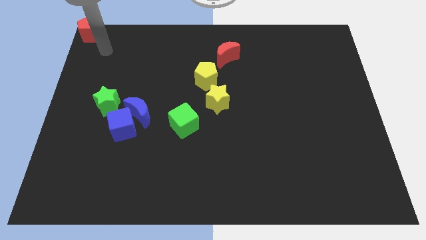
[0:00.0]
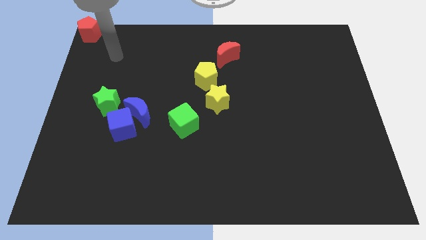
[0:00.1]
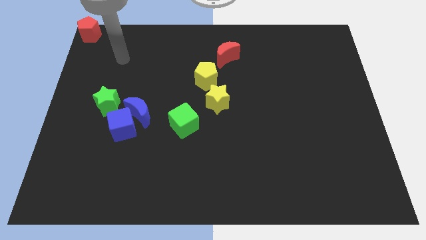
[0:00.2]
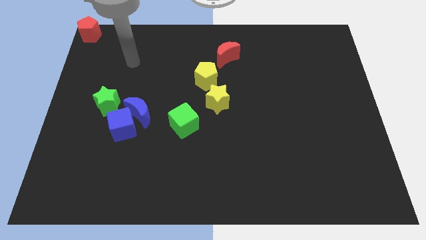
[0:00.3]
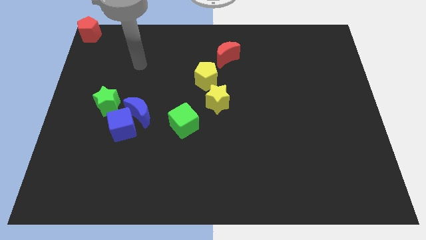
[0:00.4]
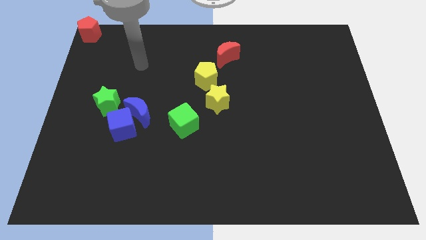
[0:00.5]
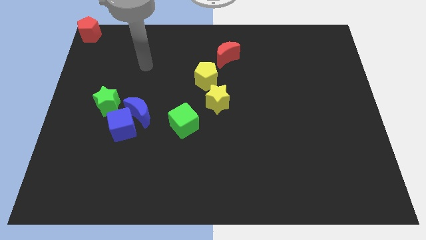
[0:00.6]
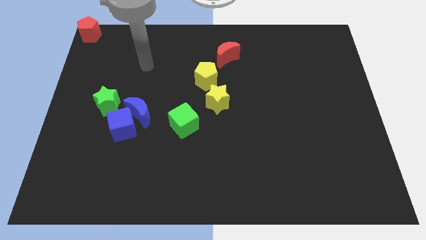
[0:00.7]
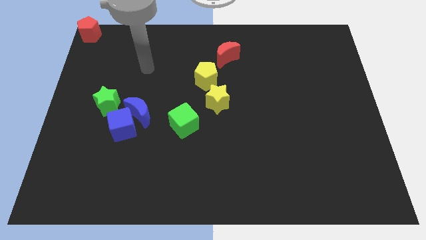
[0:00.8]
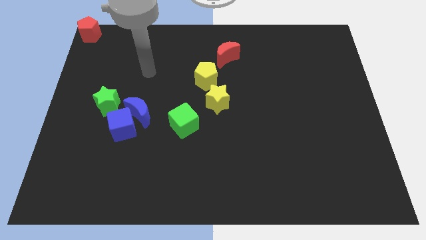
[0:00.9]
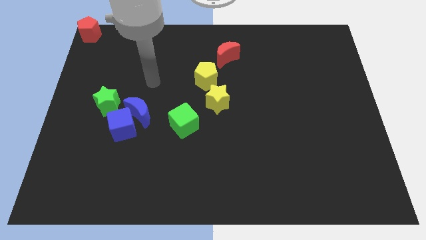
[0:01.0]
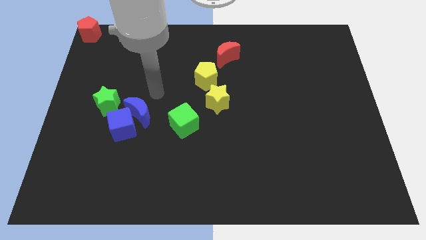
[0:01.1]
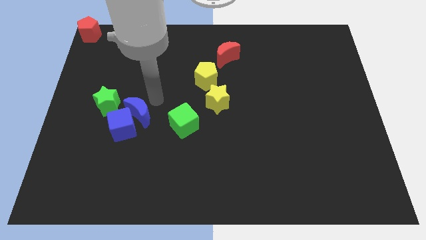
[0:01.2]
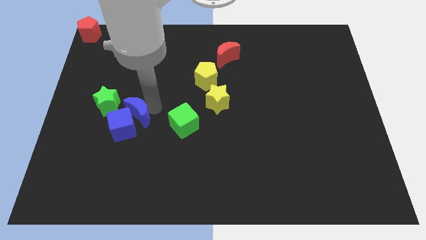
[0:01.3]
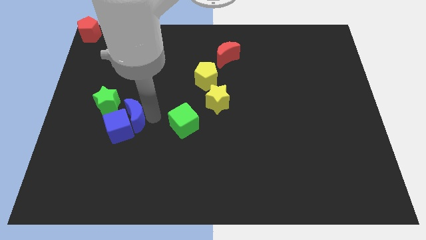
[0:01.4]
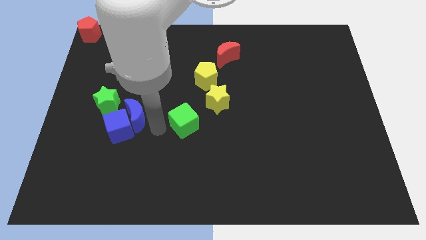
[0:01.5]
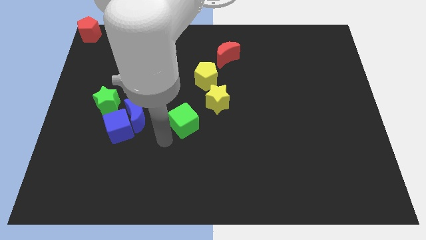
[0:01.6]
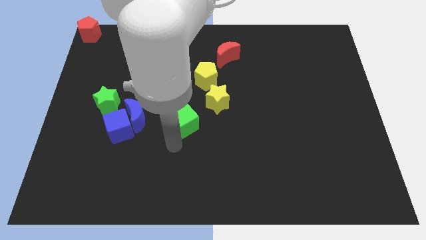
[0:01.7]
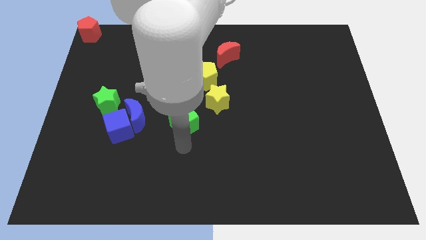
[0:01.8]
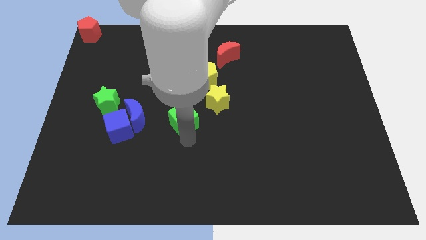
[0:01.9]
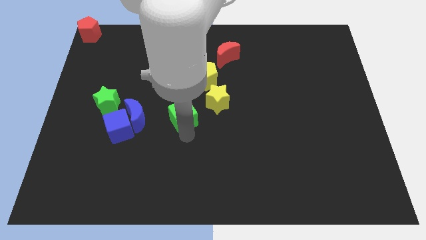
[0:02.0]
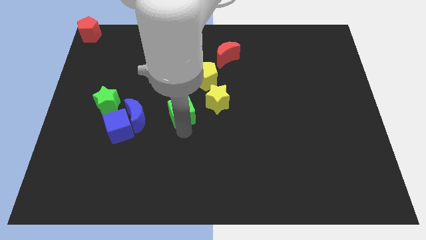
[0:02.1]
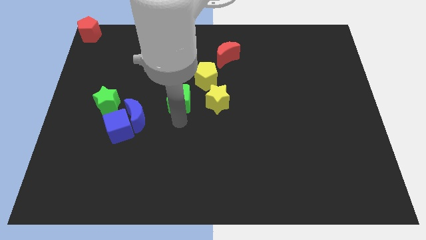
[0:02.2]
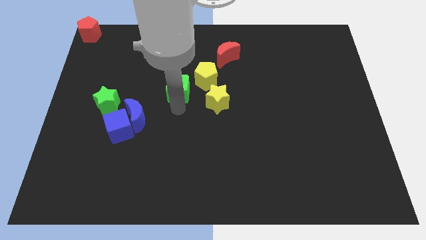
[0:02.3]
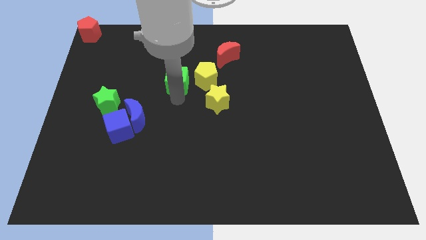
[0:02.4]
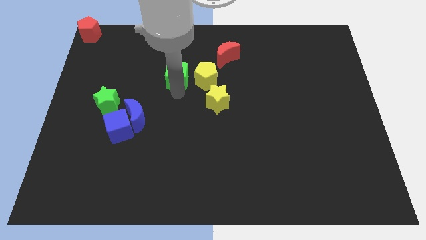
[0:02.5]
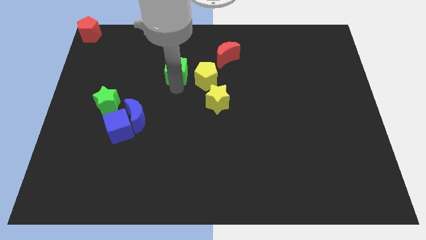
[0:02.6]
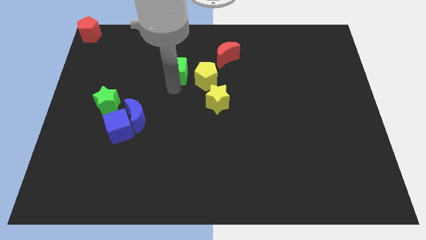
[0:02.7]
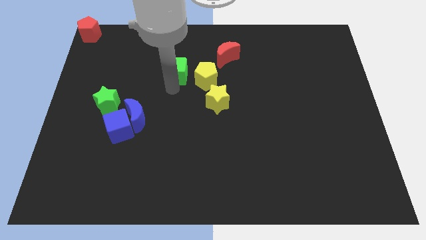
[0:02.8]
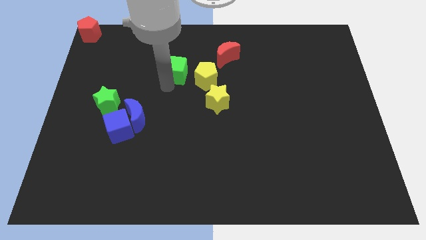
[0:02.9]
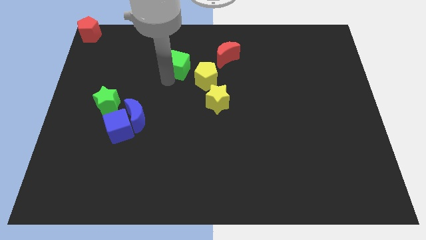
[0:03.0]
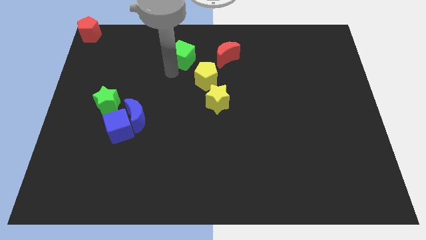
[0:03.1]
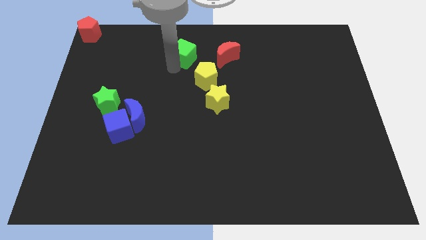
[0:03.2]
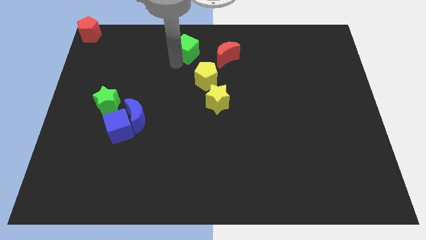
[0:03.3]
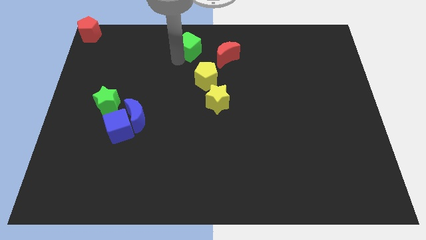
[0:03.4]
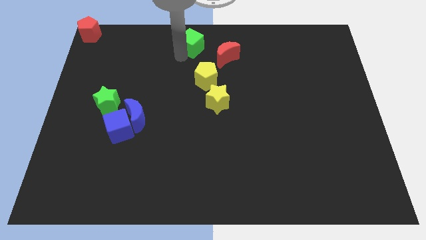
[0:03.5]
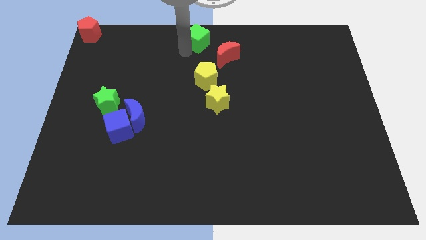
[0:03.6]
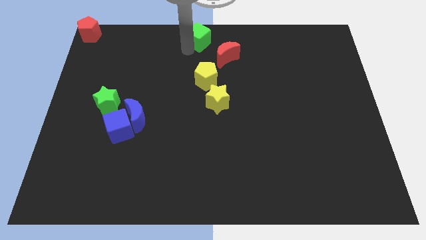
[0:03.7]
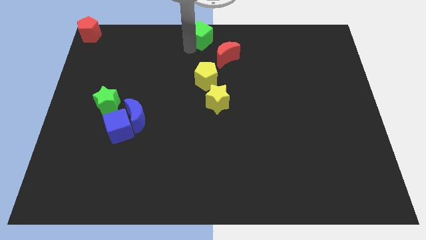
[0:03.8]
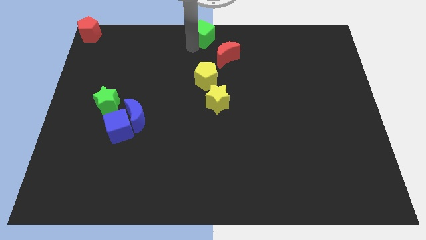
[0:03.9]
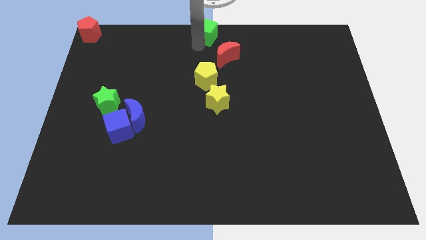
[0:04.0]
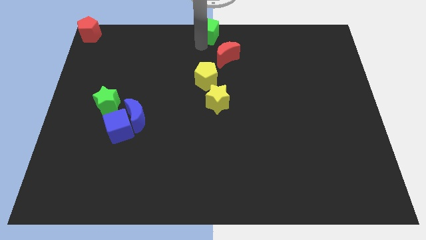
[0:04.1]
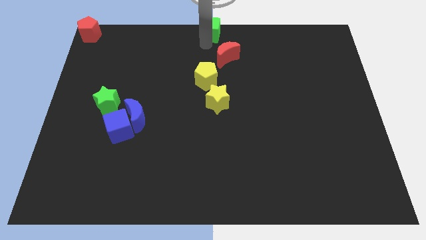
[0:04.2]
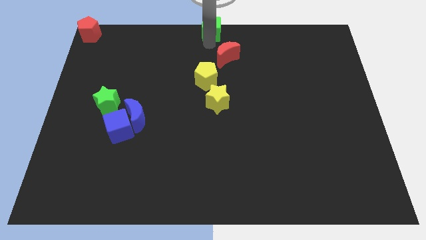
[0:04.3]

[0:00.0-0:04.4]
place the green cube at the top center of the board

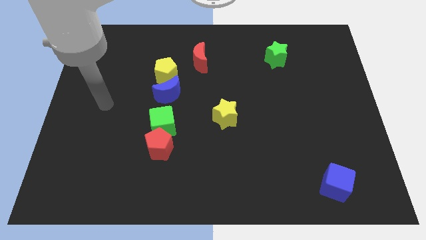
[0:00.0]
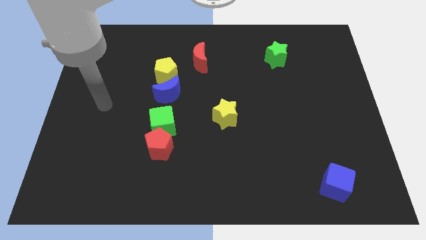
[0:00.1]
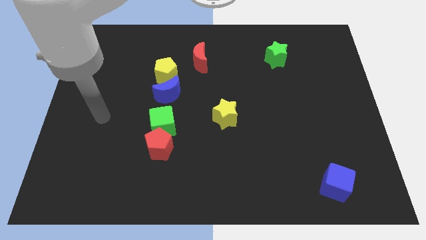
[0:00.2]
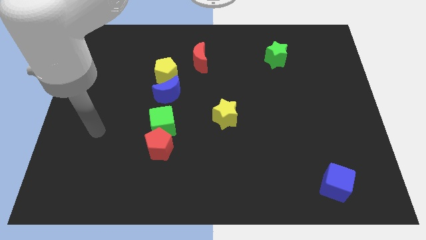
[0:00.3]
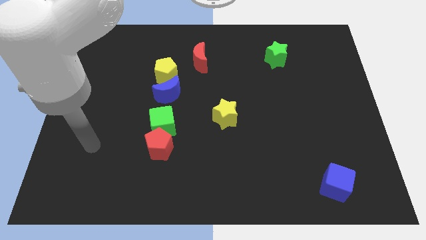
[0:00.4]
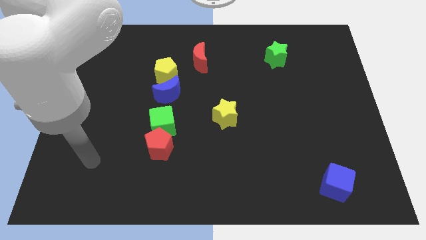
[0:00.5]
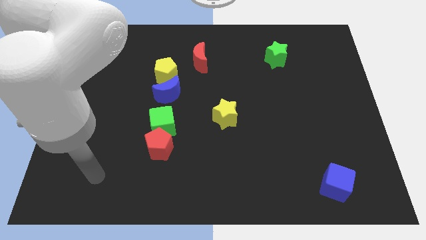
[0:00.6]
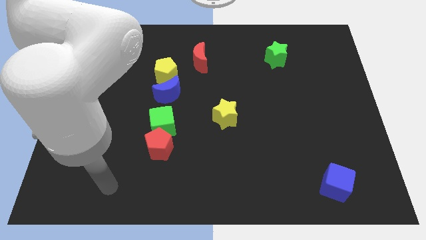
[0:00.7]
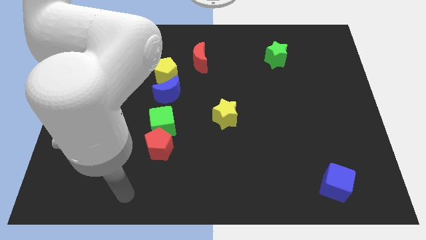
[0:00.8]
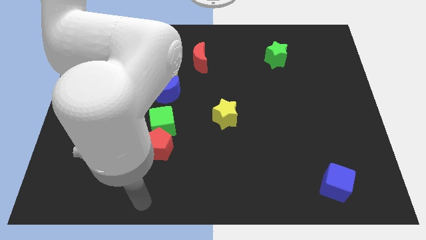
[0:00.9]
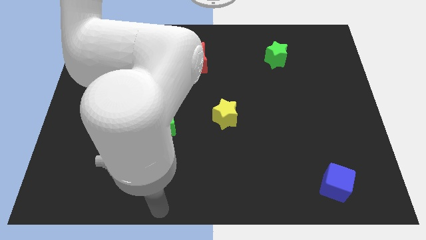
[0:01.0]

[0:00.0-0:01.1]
move your arm below the red pentagon

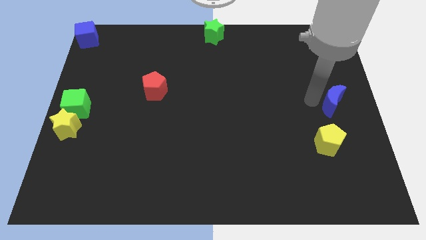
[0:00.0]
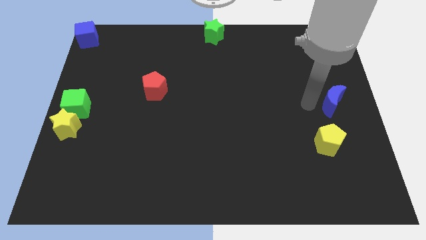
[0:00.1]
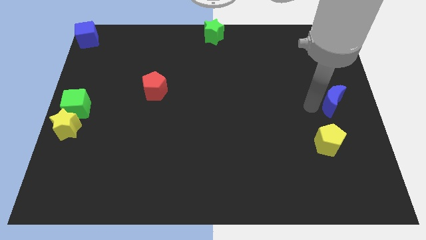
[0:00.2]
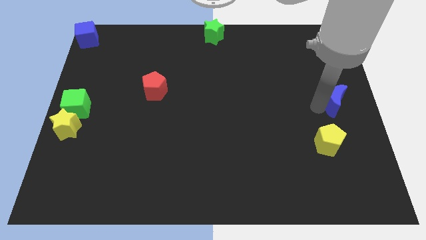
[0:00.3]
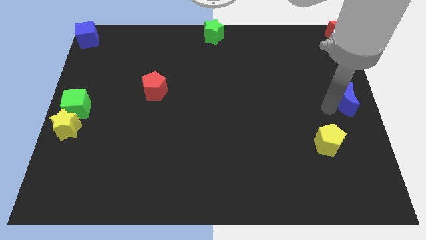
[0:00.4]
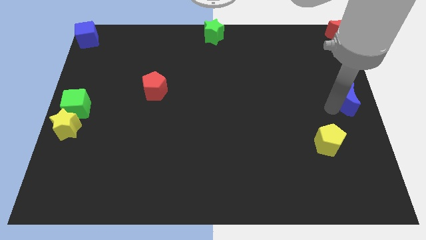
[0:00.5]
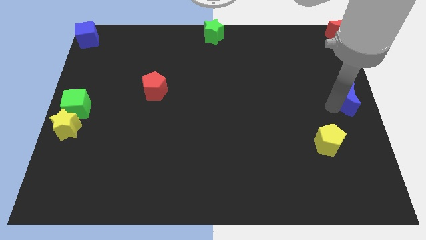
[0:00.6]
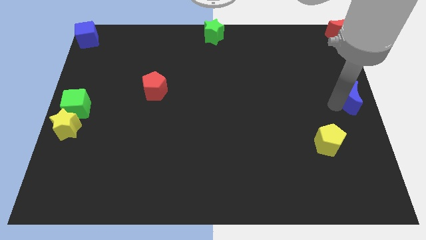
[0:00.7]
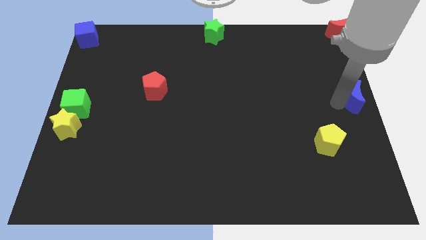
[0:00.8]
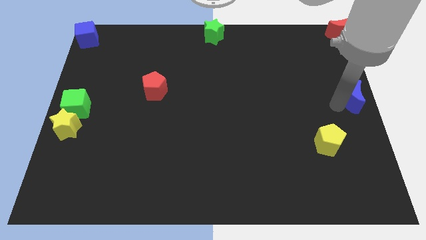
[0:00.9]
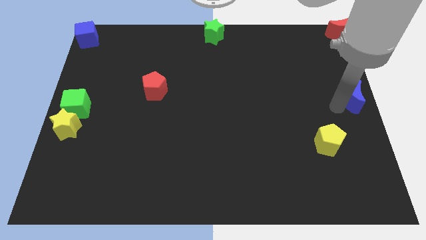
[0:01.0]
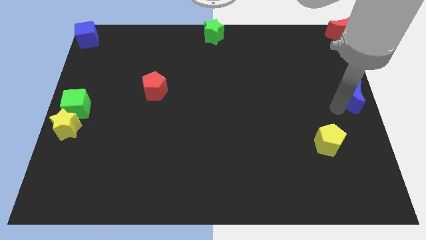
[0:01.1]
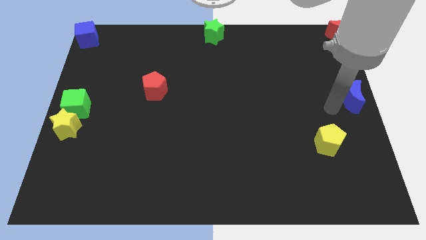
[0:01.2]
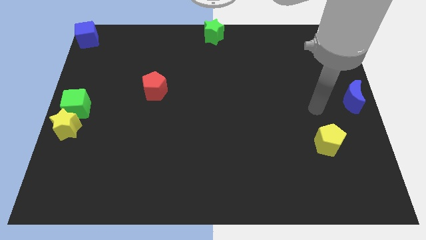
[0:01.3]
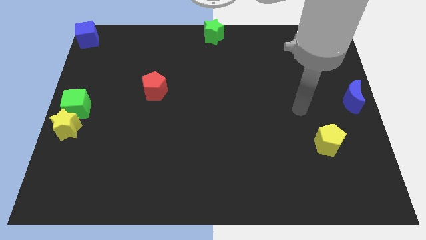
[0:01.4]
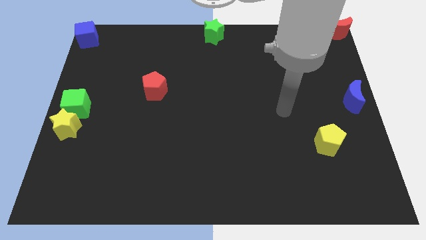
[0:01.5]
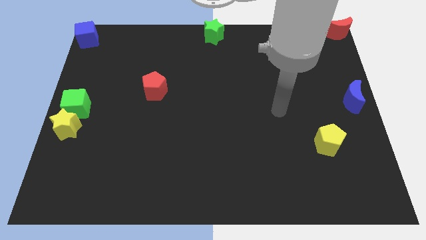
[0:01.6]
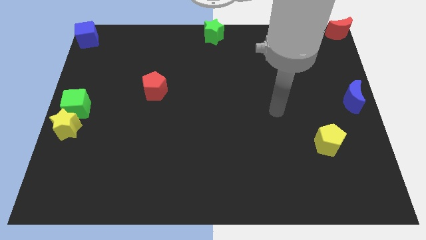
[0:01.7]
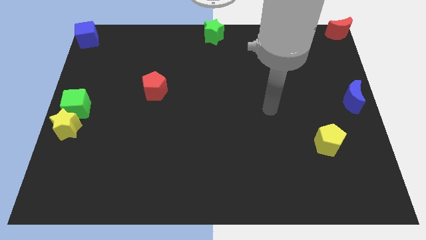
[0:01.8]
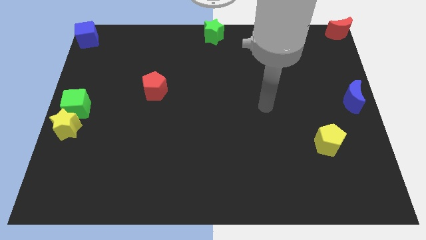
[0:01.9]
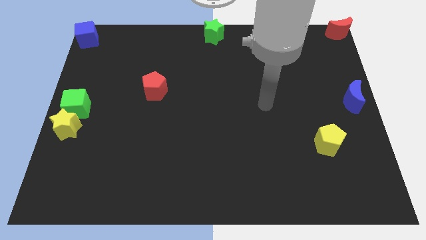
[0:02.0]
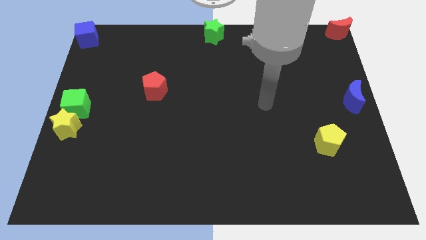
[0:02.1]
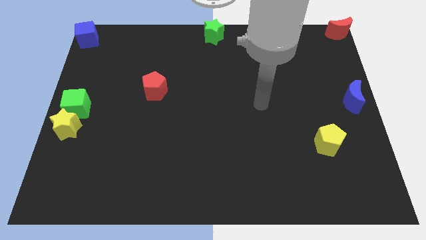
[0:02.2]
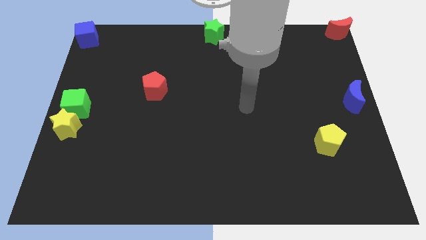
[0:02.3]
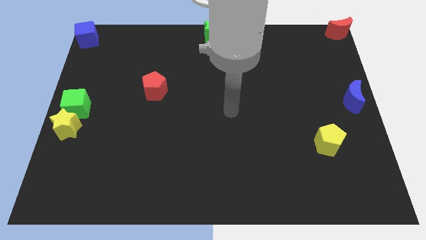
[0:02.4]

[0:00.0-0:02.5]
move red moon to the middle right corner of the board

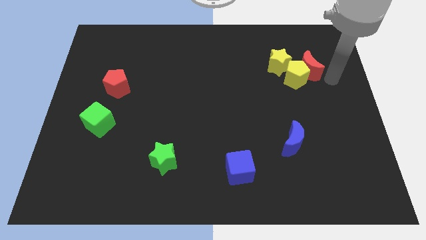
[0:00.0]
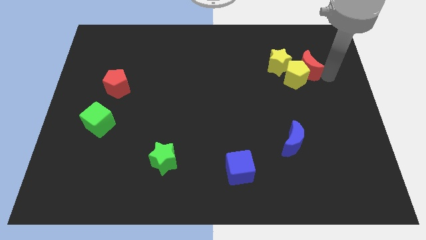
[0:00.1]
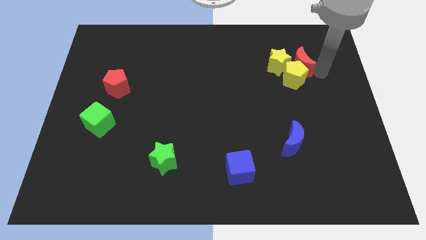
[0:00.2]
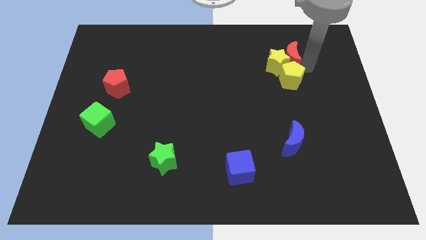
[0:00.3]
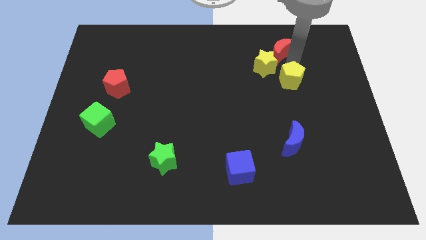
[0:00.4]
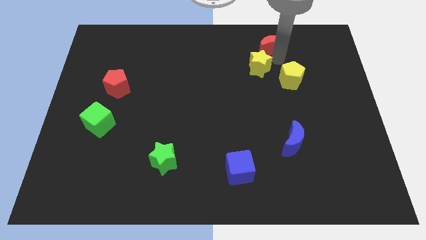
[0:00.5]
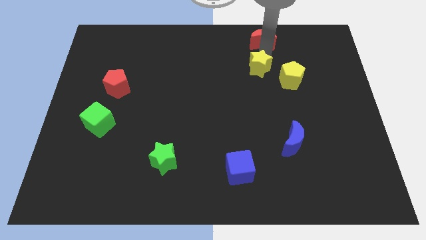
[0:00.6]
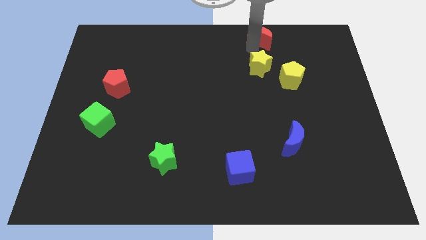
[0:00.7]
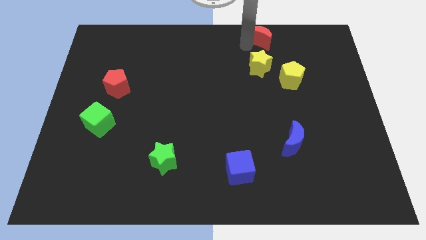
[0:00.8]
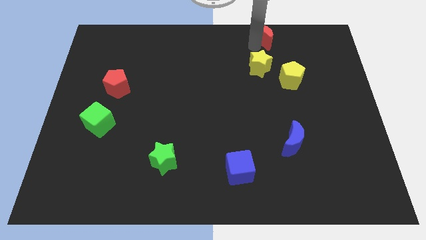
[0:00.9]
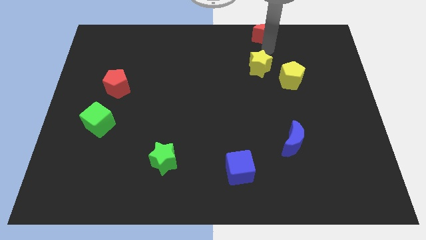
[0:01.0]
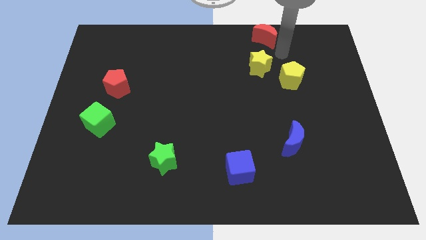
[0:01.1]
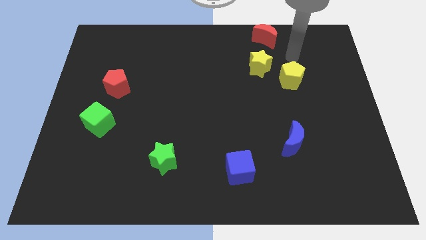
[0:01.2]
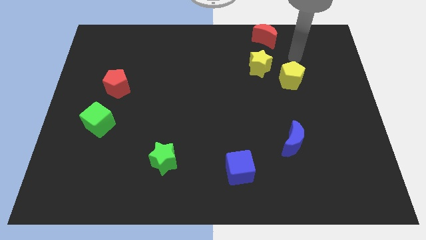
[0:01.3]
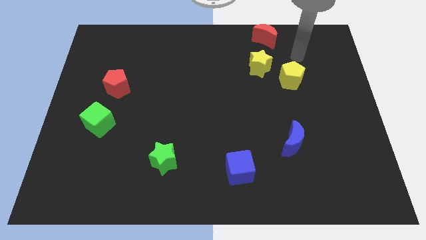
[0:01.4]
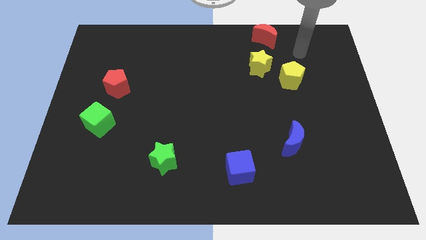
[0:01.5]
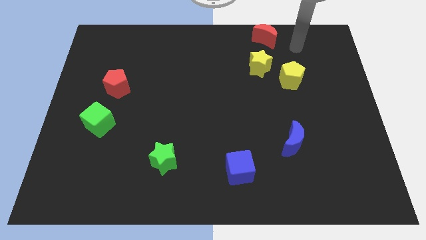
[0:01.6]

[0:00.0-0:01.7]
push the red crescent to the top side of the yellow star
